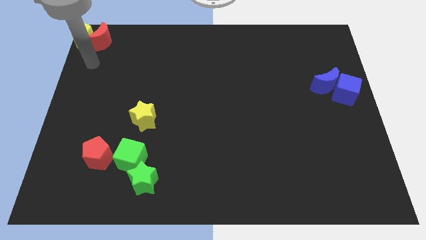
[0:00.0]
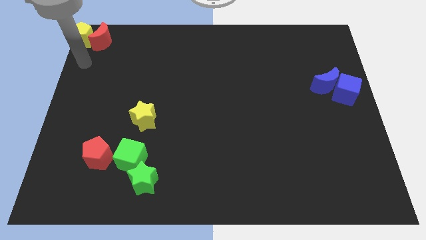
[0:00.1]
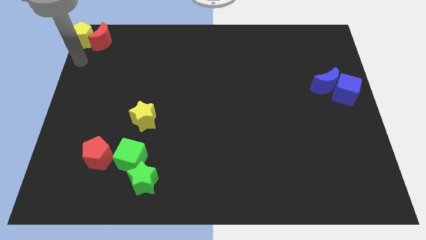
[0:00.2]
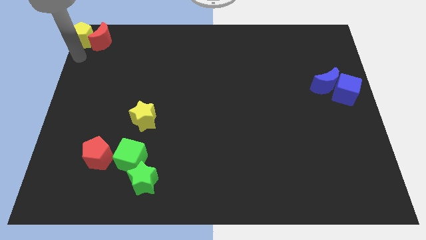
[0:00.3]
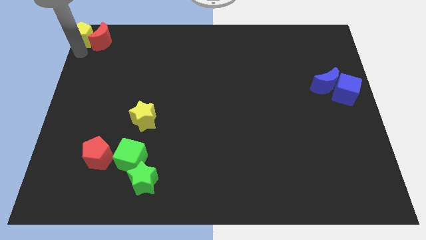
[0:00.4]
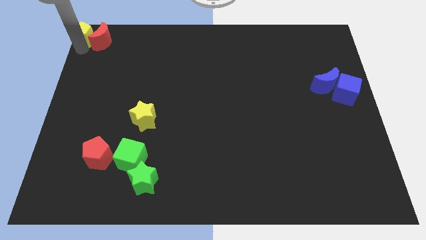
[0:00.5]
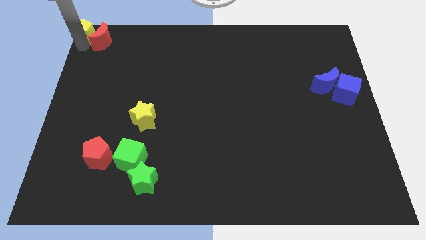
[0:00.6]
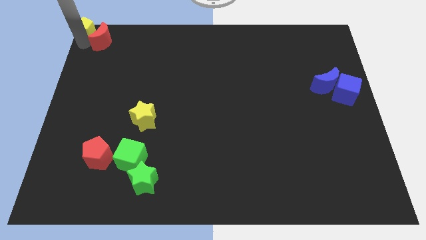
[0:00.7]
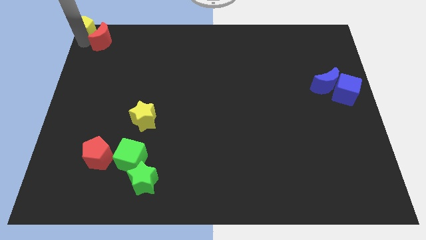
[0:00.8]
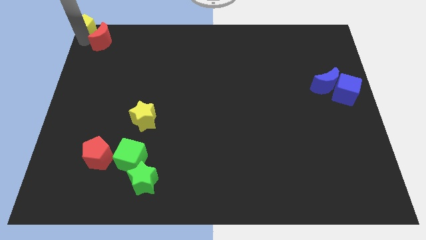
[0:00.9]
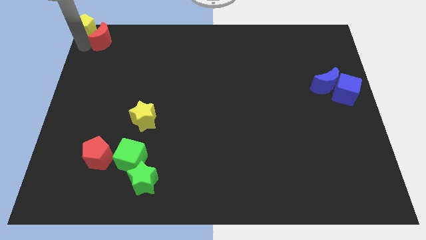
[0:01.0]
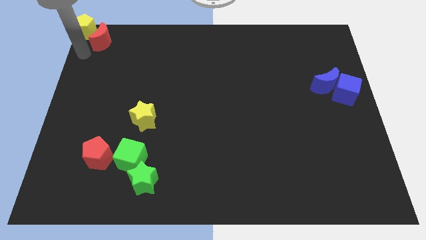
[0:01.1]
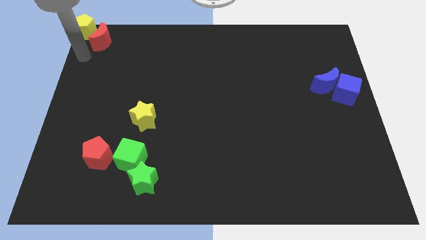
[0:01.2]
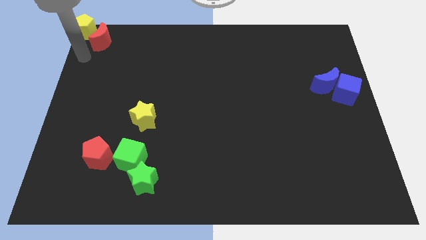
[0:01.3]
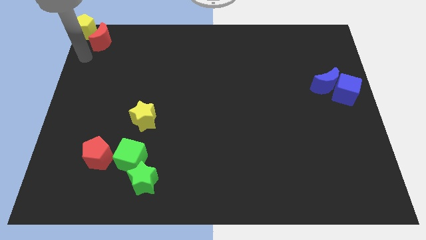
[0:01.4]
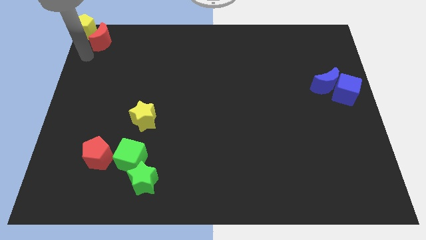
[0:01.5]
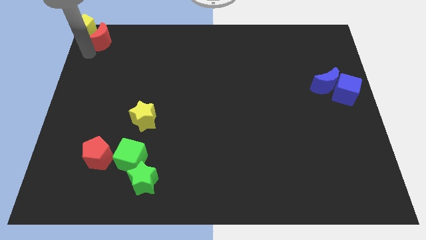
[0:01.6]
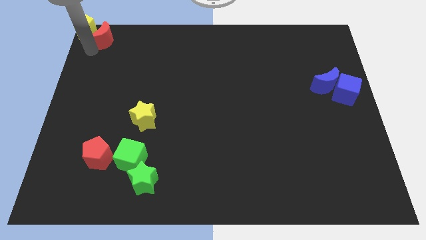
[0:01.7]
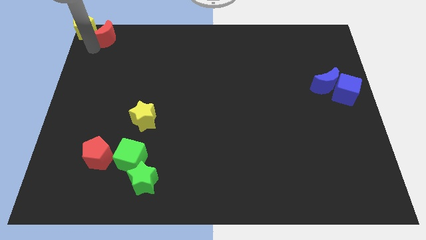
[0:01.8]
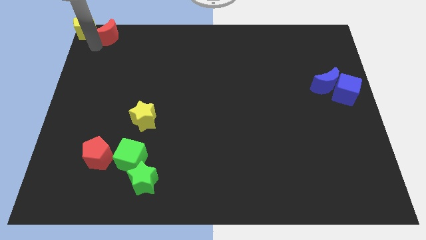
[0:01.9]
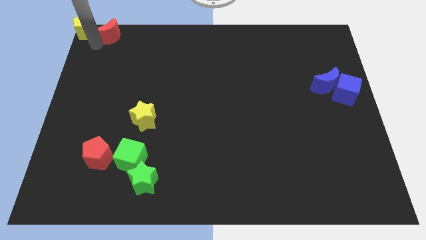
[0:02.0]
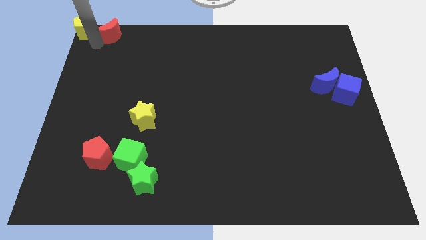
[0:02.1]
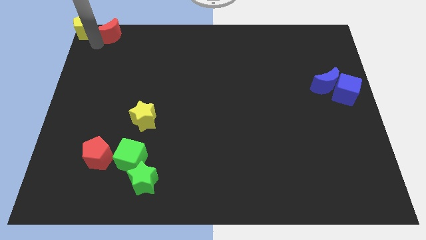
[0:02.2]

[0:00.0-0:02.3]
adjust the yellow pentagon and red moon to the top left corner

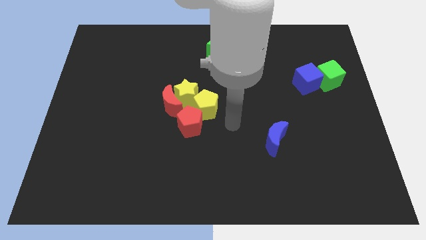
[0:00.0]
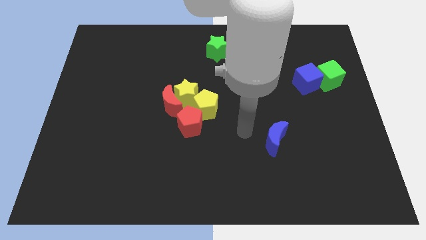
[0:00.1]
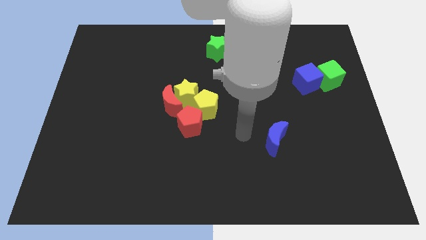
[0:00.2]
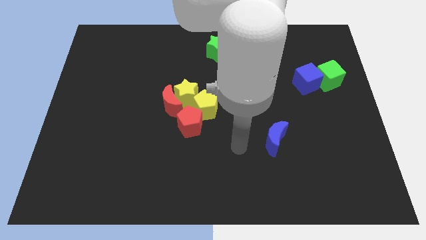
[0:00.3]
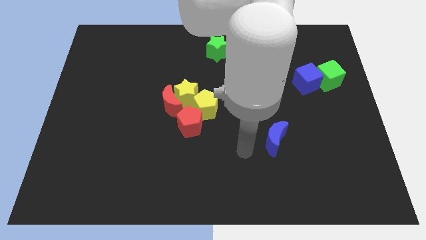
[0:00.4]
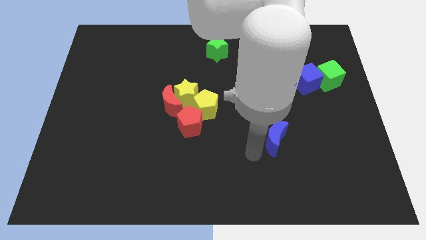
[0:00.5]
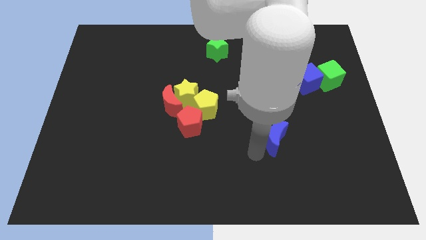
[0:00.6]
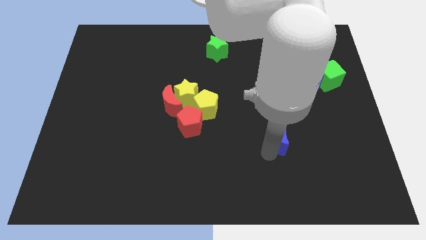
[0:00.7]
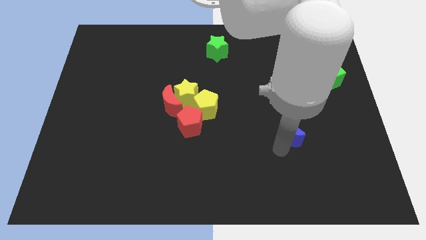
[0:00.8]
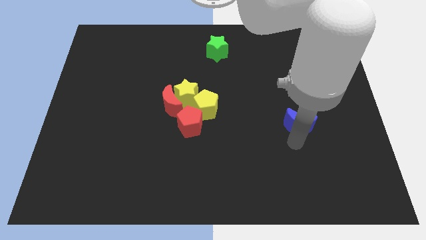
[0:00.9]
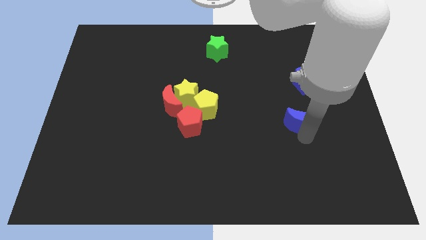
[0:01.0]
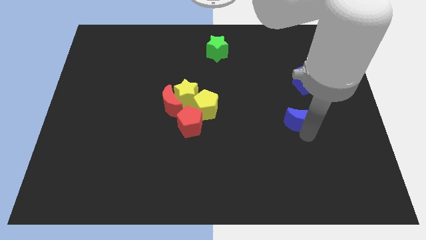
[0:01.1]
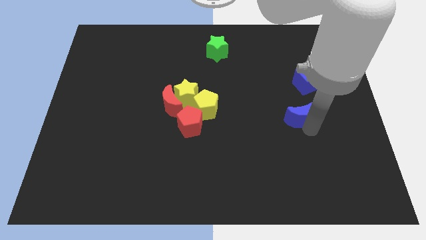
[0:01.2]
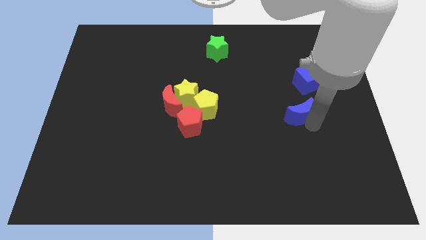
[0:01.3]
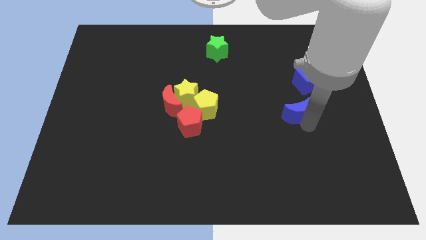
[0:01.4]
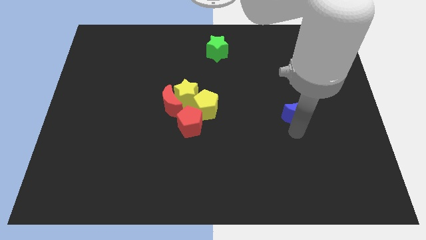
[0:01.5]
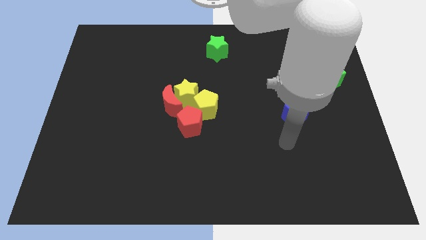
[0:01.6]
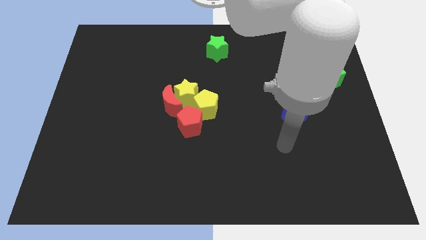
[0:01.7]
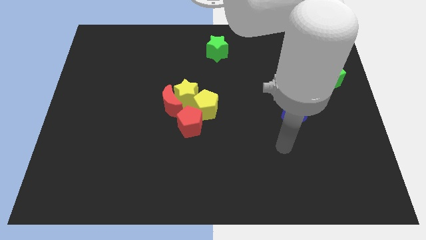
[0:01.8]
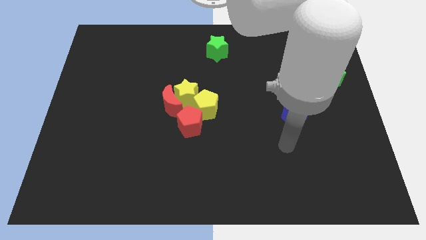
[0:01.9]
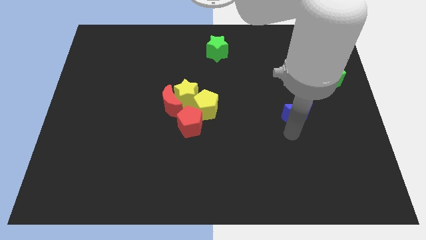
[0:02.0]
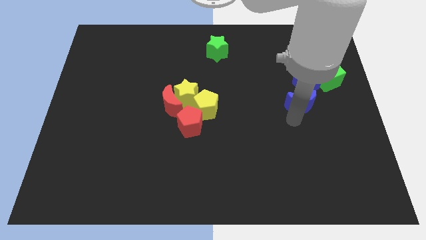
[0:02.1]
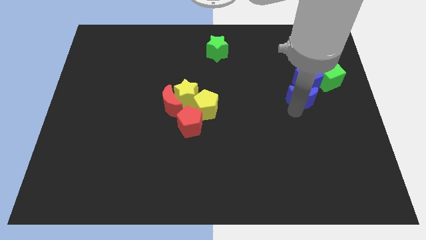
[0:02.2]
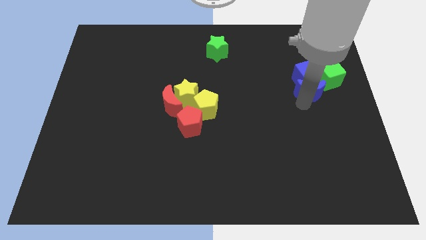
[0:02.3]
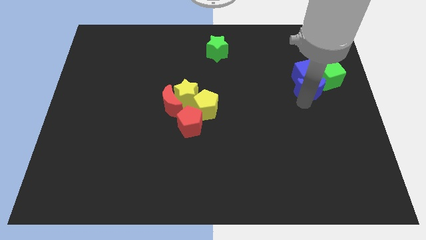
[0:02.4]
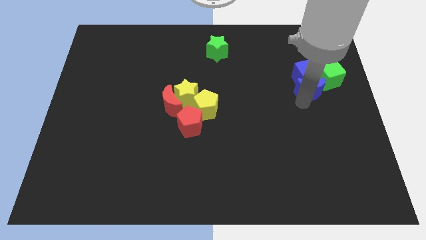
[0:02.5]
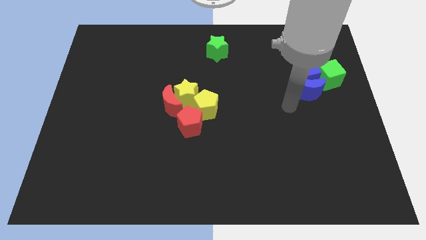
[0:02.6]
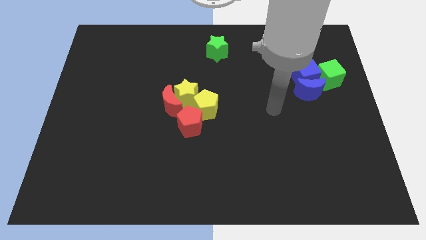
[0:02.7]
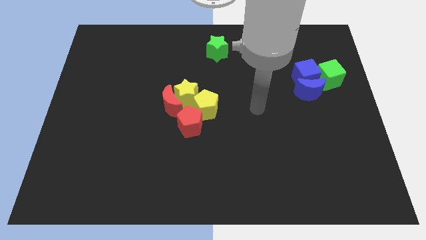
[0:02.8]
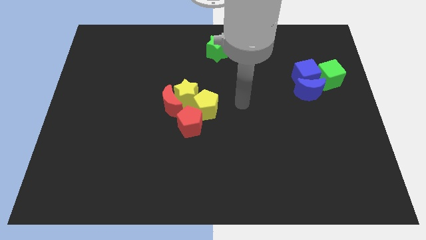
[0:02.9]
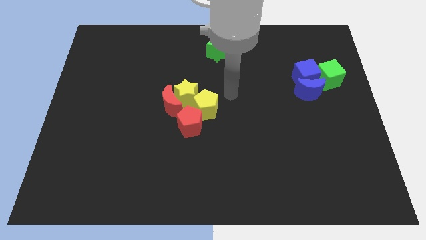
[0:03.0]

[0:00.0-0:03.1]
push the blue crescent below the blue cube

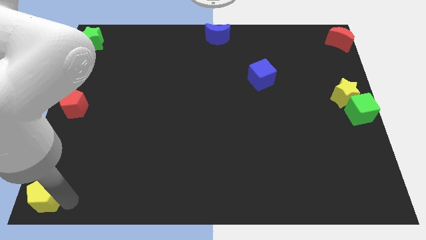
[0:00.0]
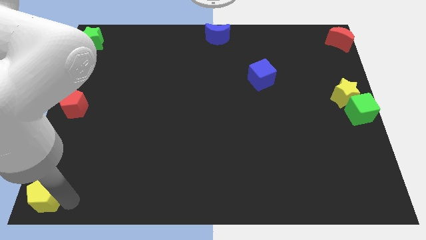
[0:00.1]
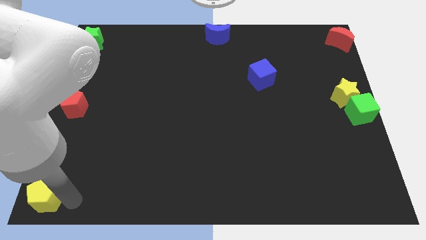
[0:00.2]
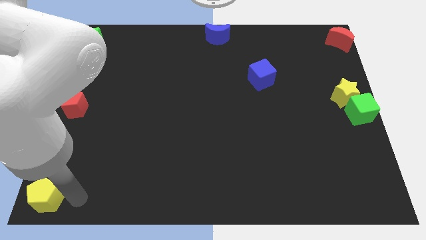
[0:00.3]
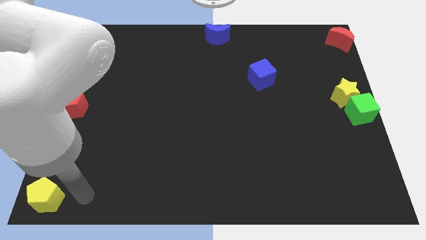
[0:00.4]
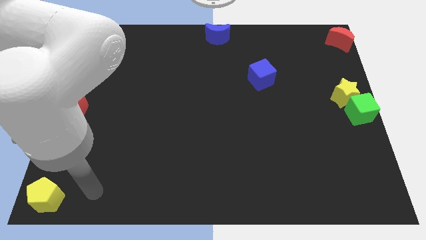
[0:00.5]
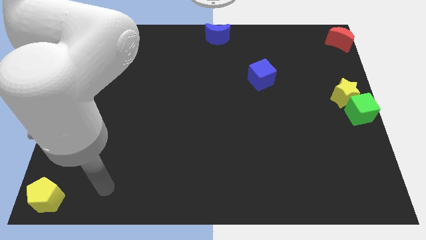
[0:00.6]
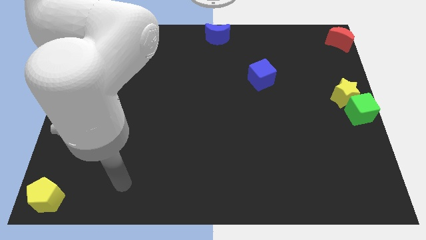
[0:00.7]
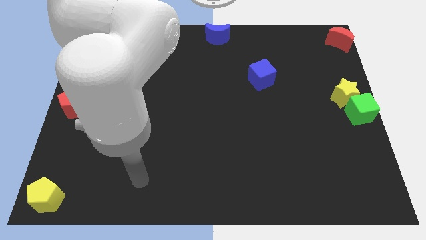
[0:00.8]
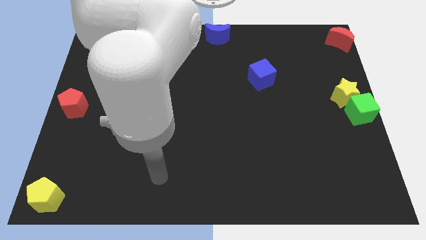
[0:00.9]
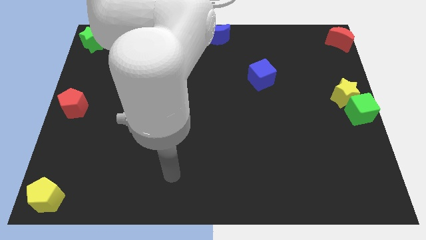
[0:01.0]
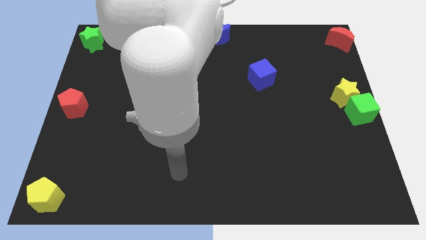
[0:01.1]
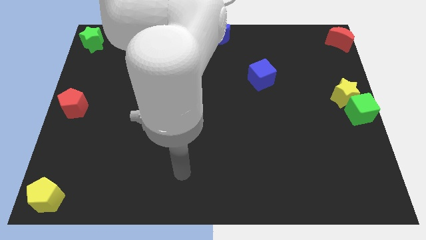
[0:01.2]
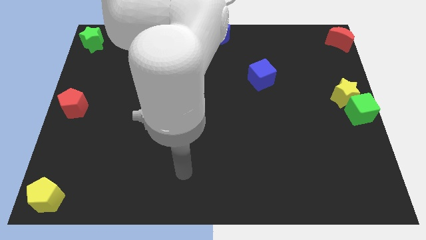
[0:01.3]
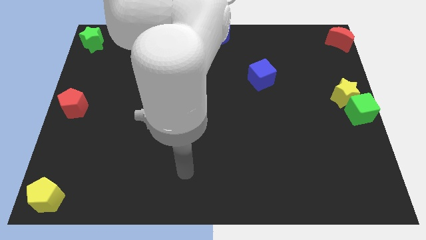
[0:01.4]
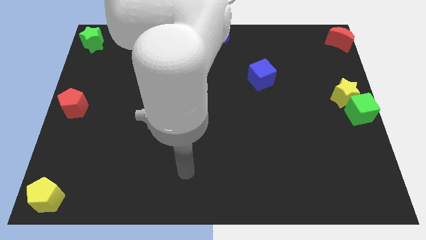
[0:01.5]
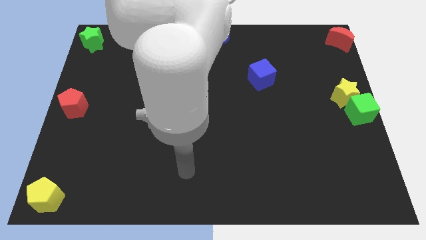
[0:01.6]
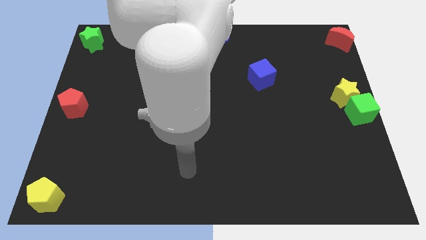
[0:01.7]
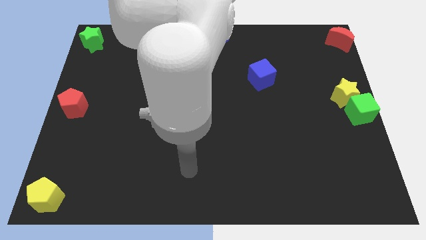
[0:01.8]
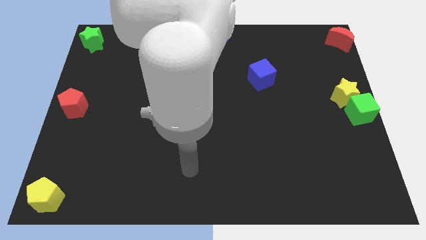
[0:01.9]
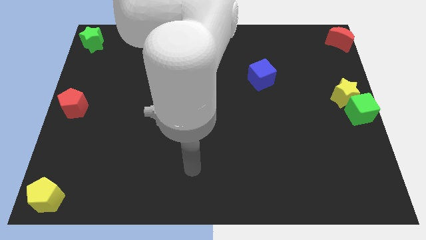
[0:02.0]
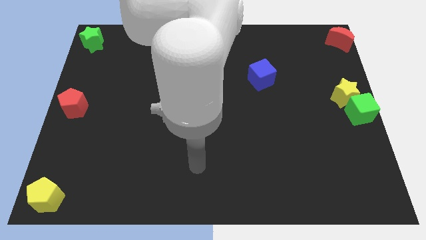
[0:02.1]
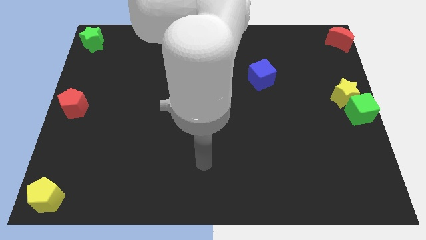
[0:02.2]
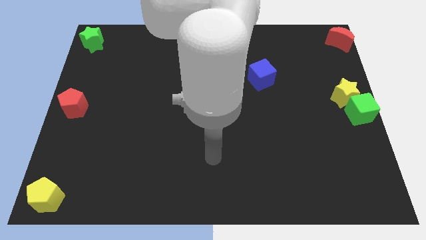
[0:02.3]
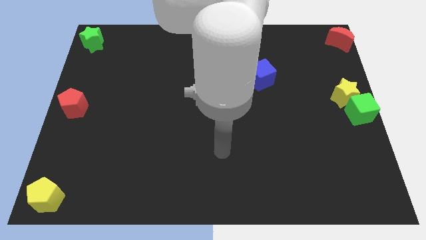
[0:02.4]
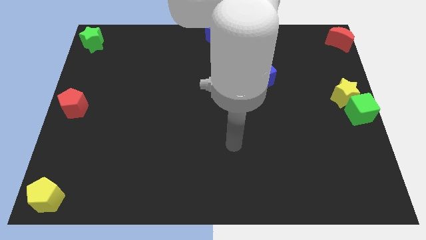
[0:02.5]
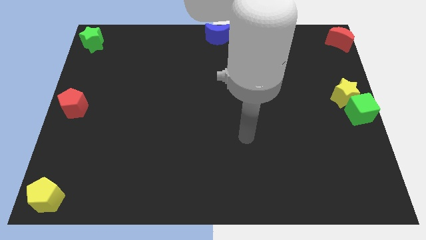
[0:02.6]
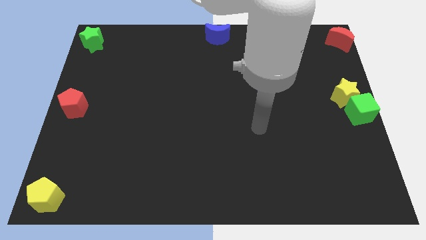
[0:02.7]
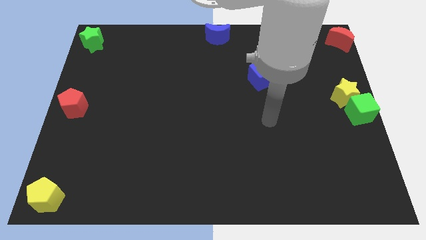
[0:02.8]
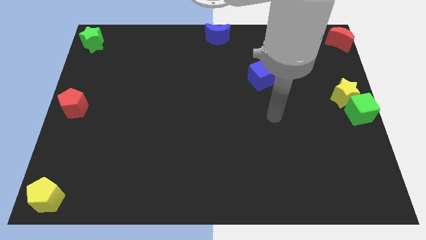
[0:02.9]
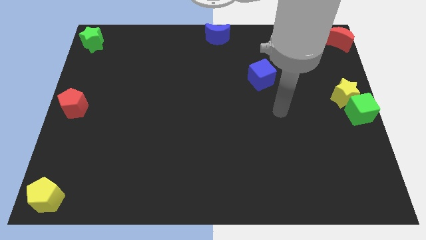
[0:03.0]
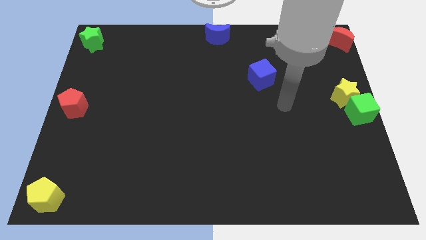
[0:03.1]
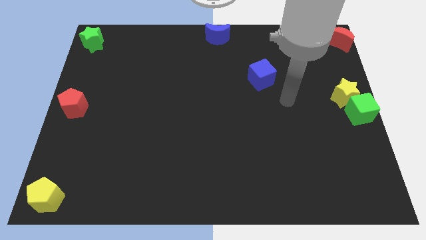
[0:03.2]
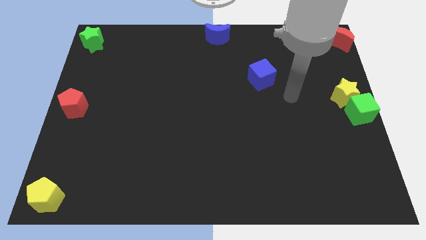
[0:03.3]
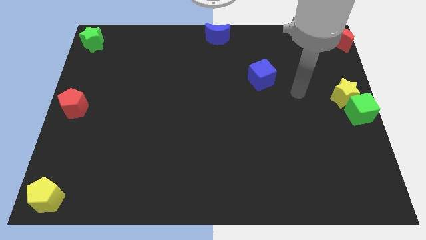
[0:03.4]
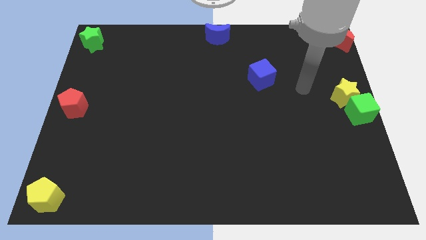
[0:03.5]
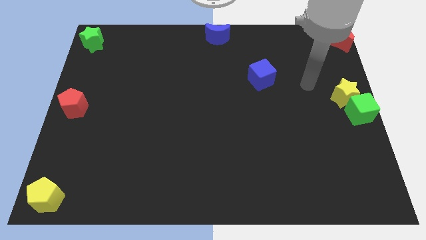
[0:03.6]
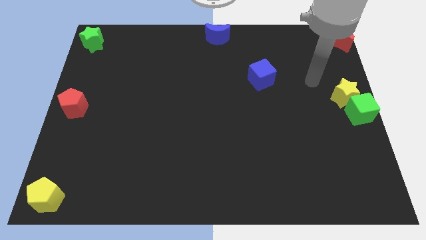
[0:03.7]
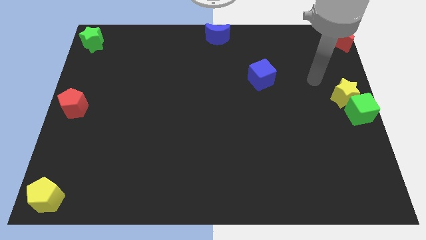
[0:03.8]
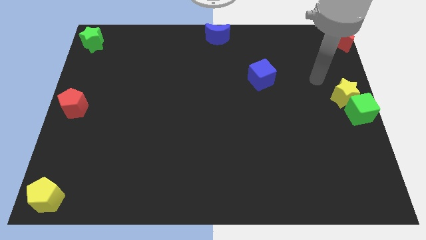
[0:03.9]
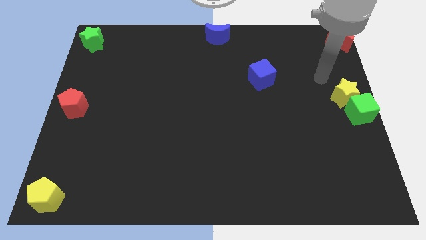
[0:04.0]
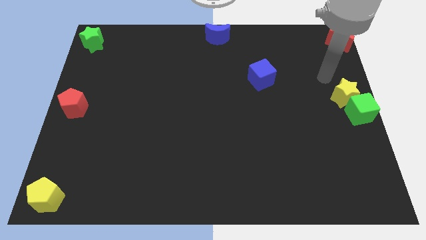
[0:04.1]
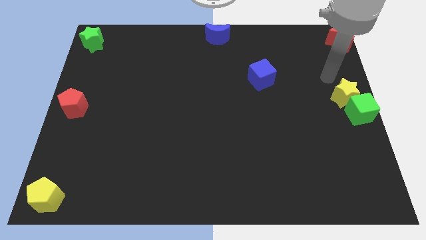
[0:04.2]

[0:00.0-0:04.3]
move the arm away from the yellow pentagon
